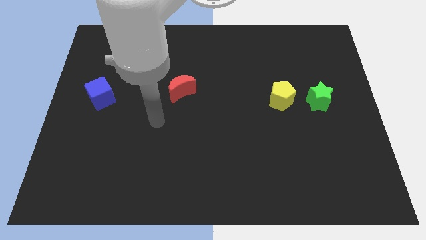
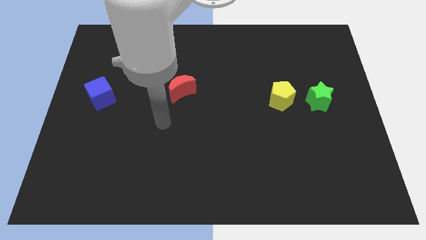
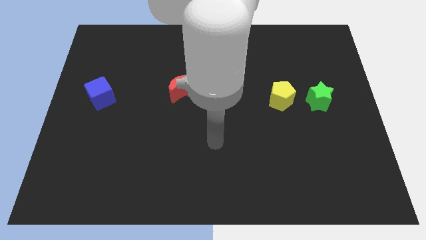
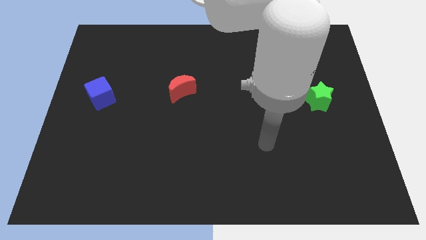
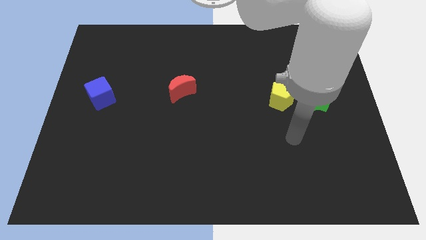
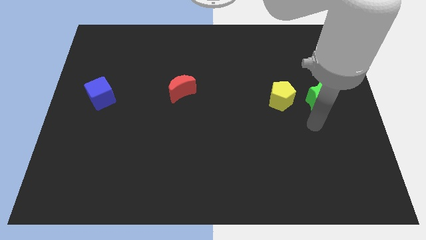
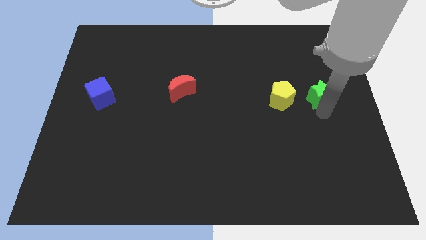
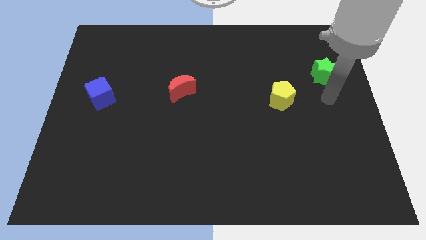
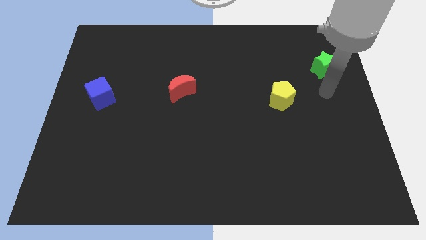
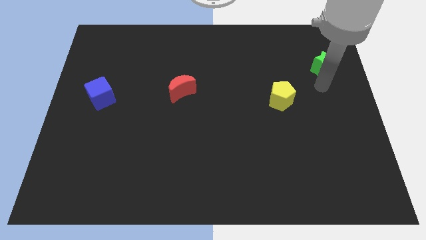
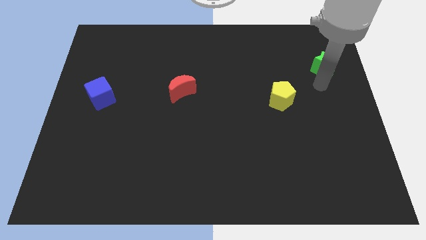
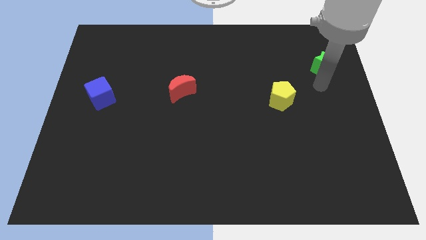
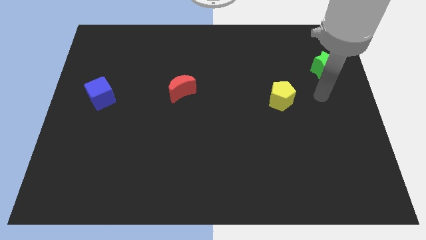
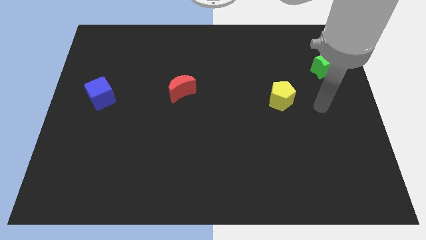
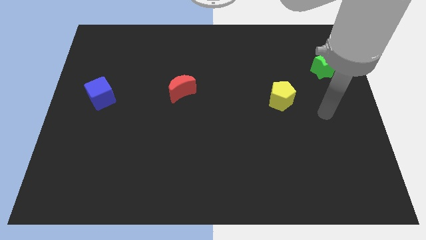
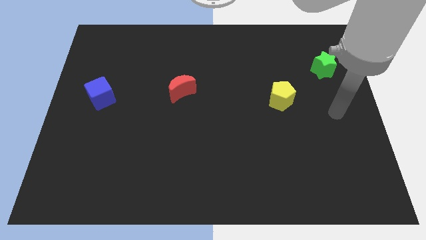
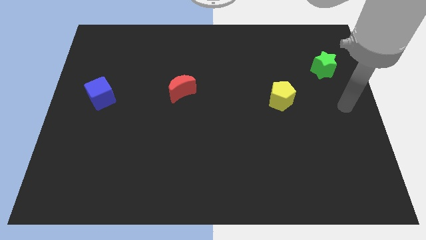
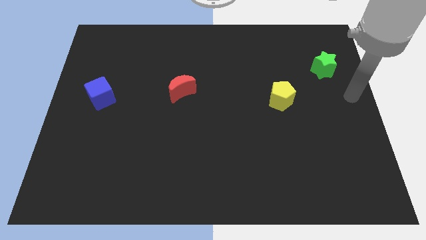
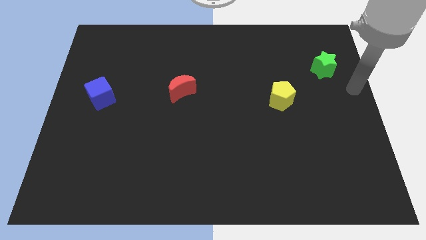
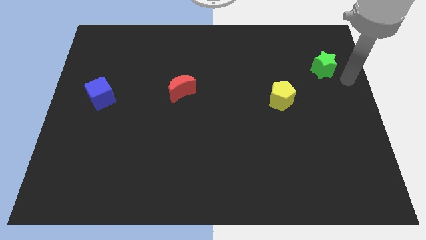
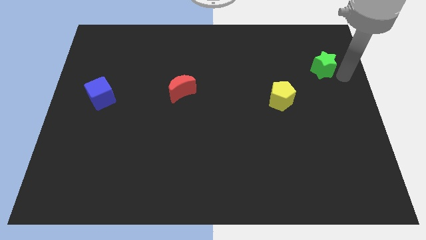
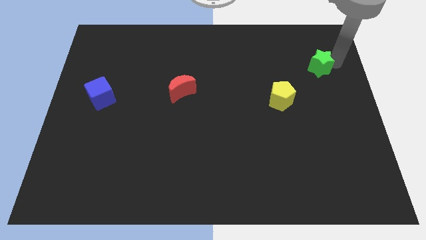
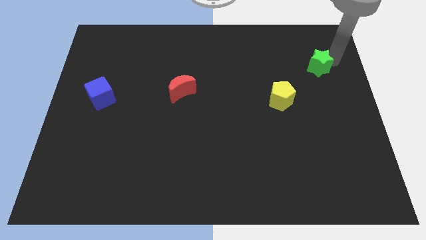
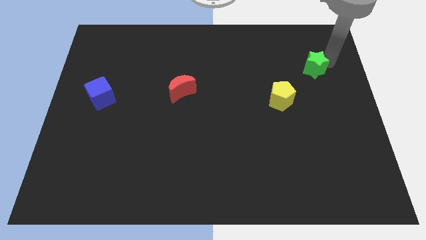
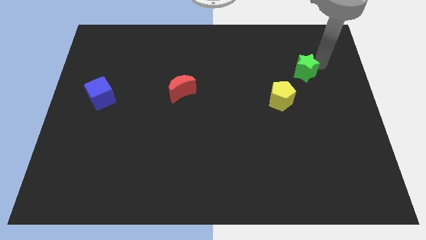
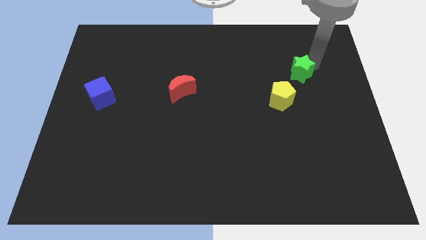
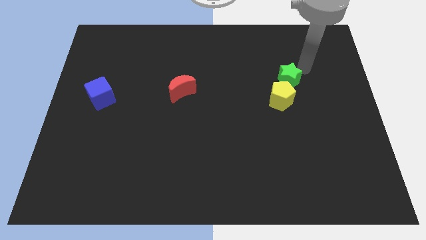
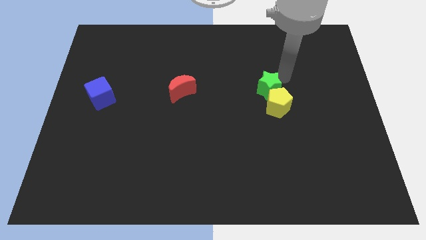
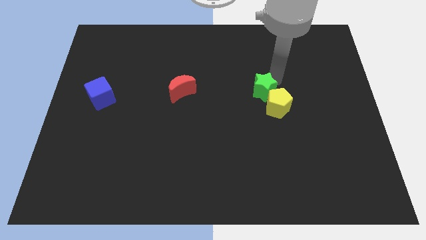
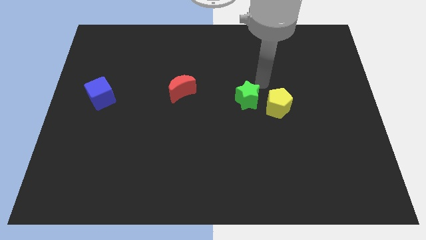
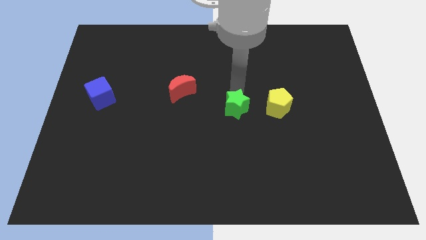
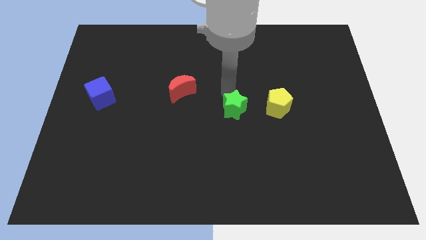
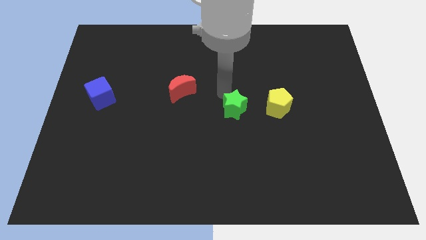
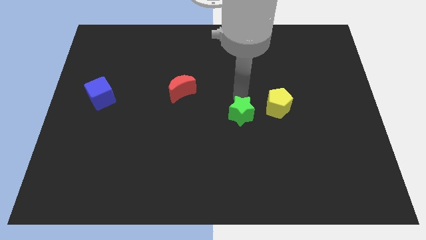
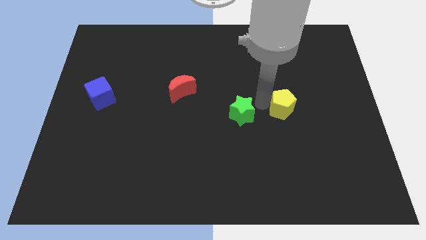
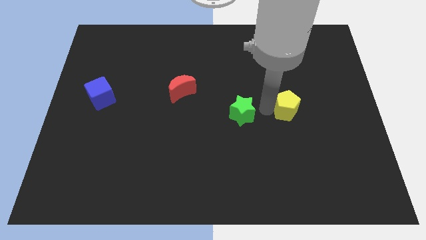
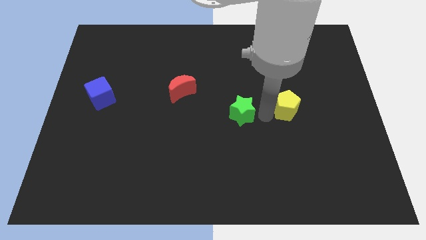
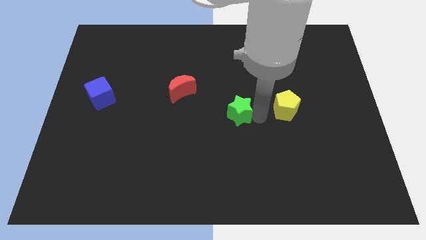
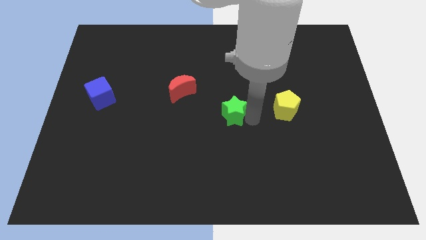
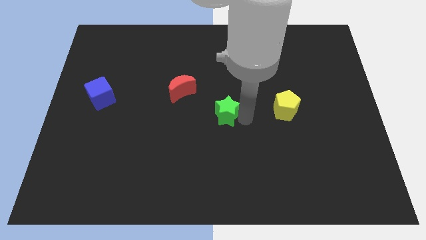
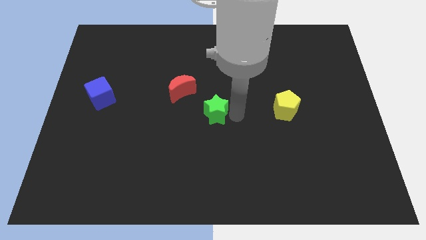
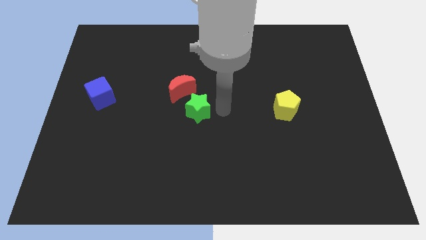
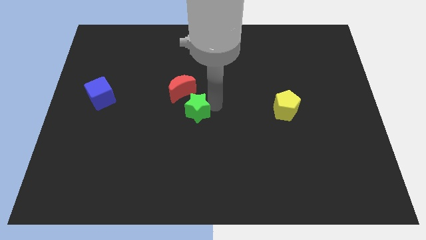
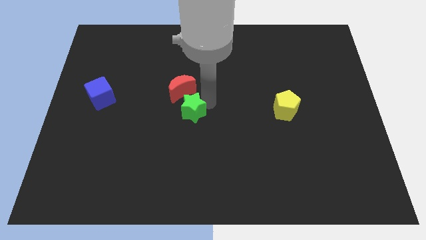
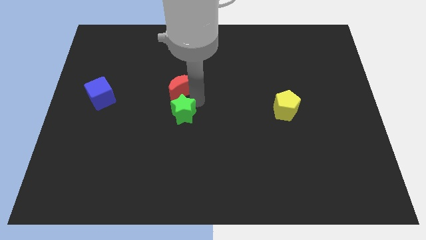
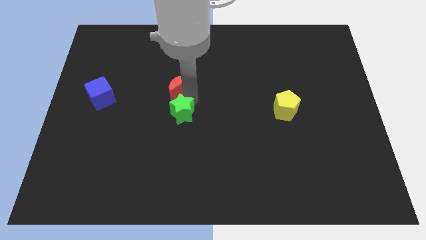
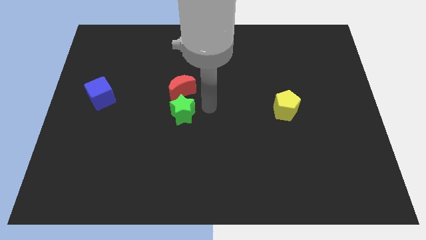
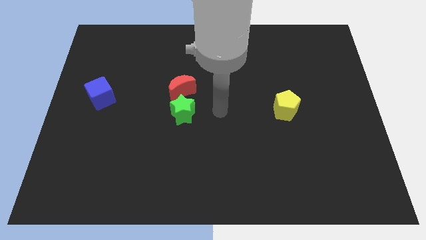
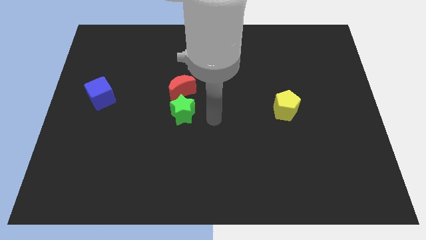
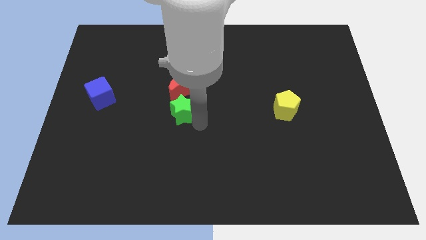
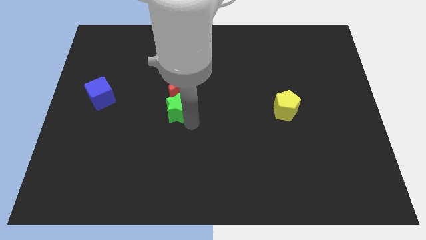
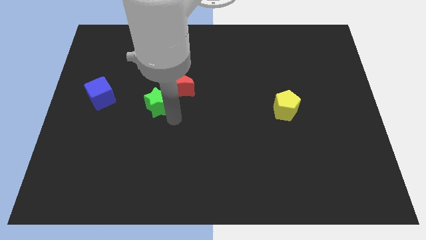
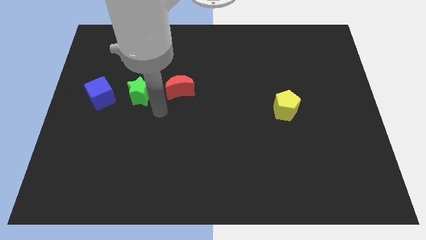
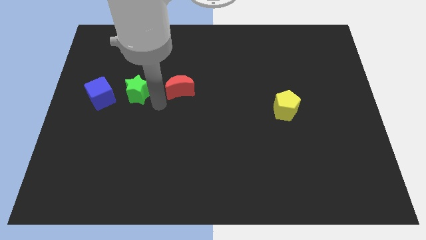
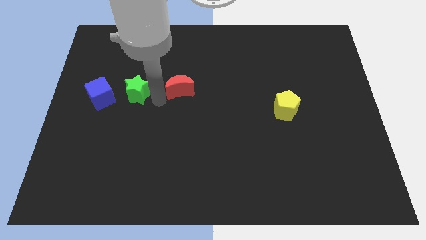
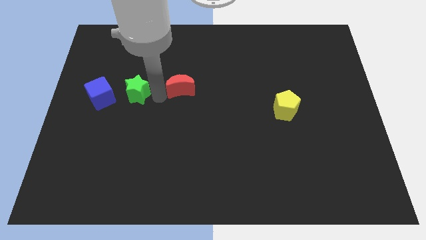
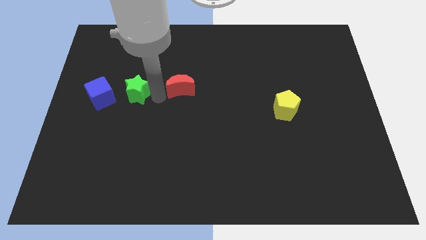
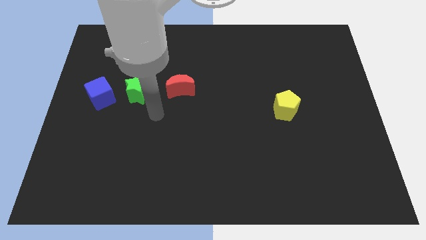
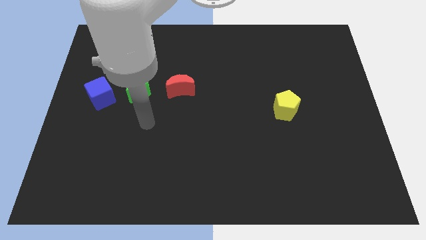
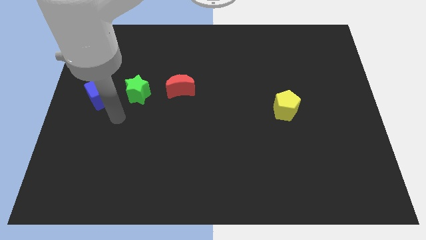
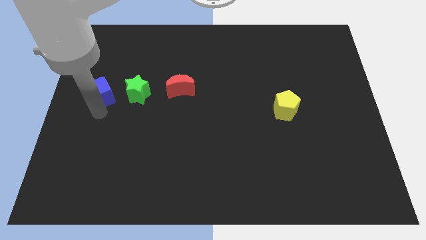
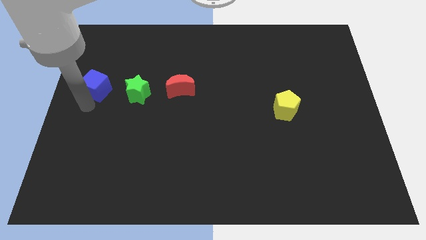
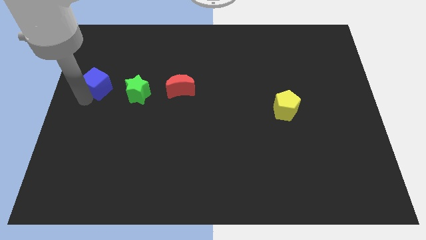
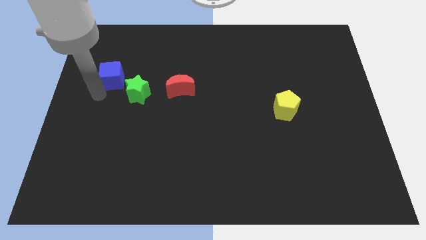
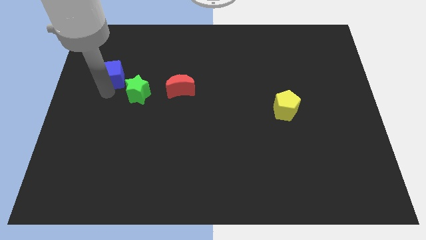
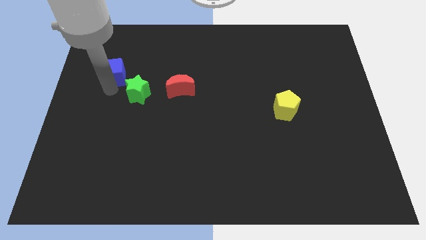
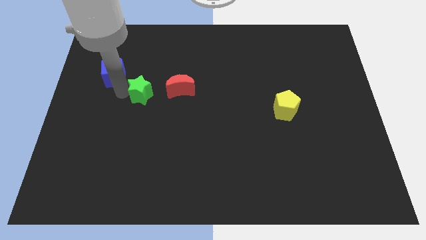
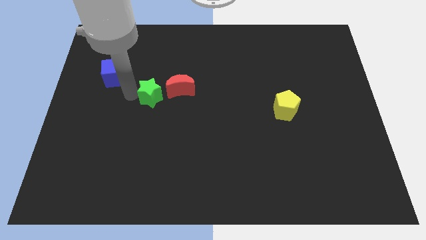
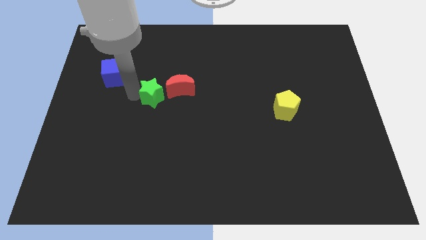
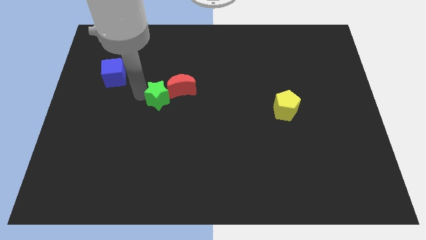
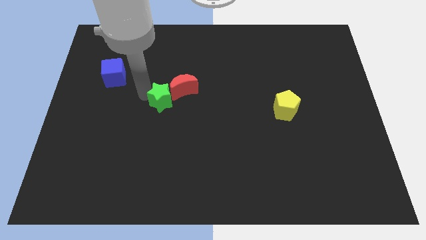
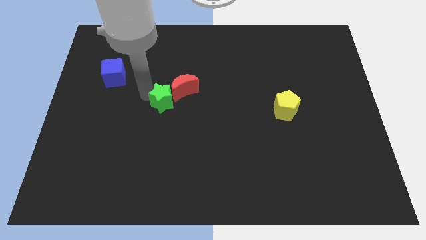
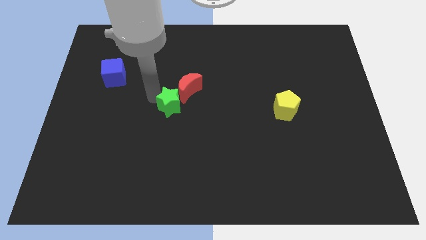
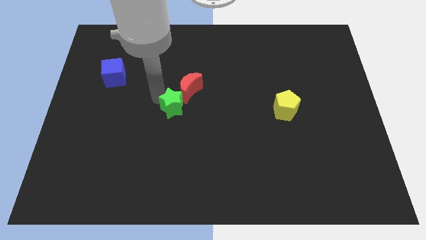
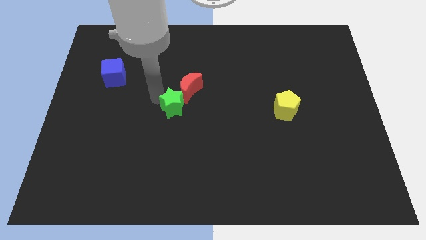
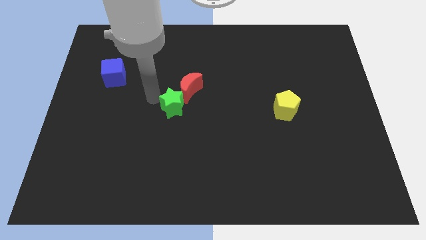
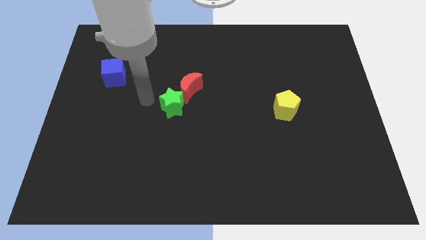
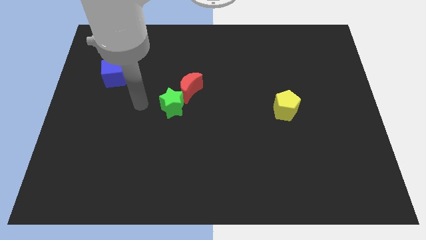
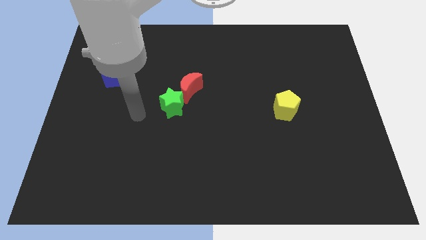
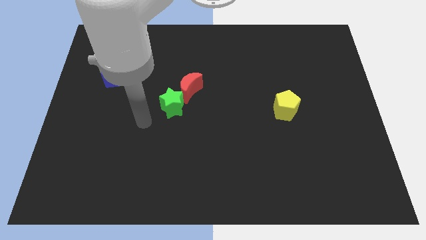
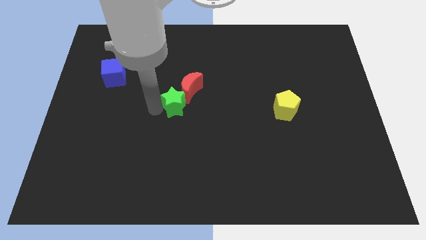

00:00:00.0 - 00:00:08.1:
slide the green block to the red moon

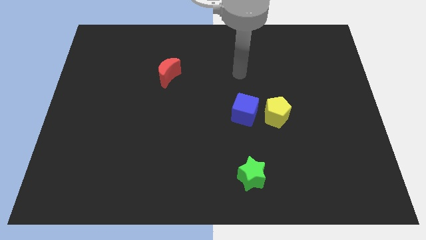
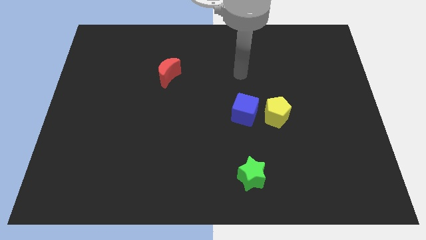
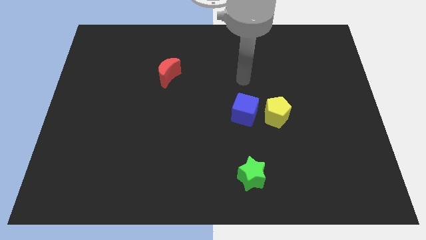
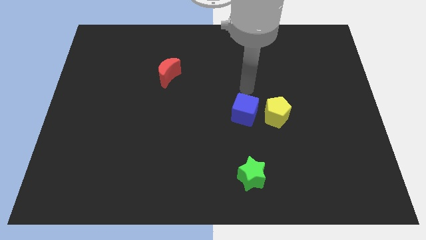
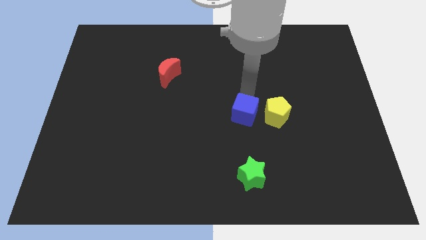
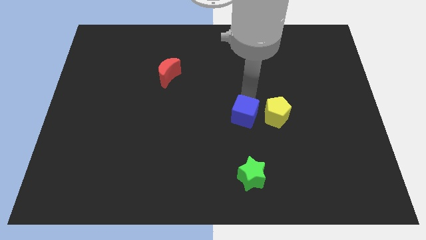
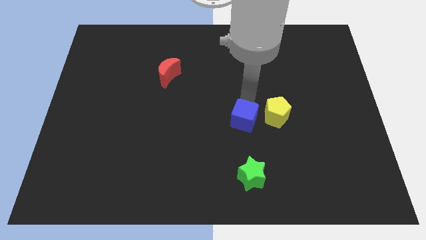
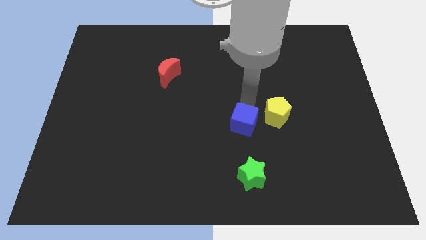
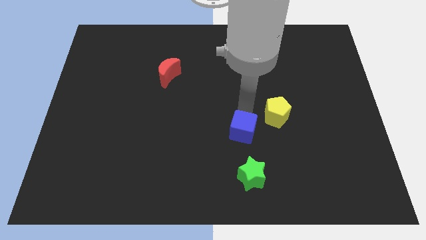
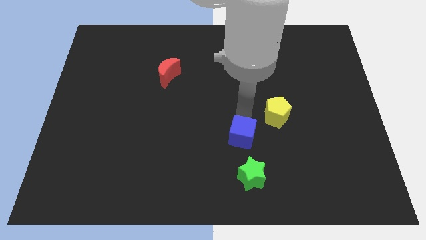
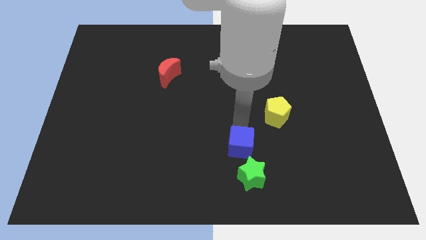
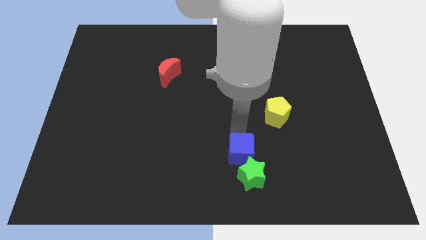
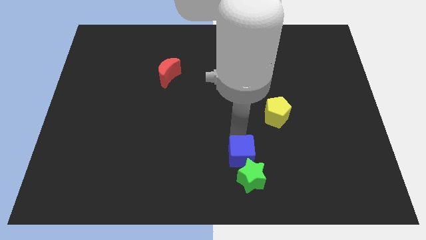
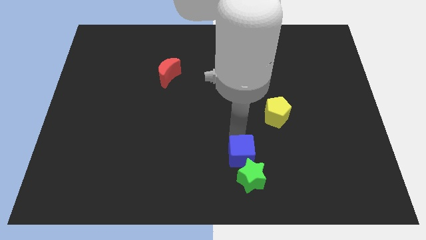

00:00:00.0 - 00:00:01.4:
push the blue cube towards the star
